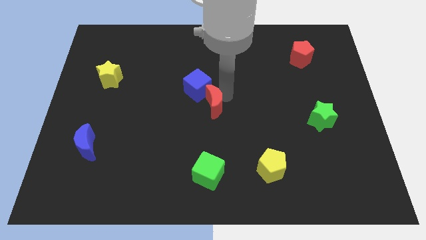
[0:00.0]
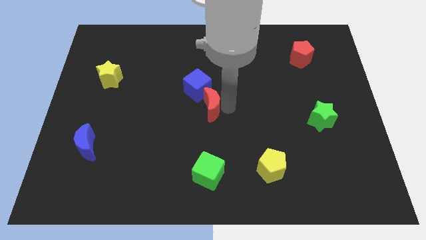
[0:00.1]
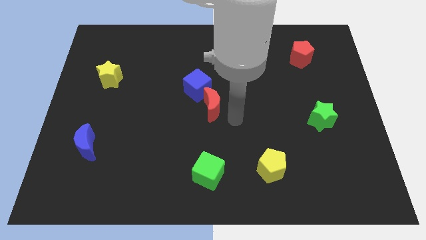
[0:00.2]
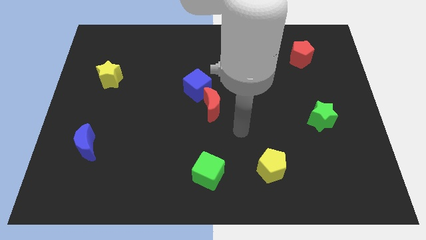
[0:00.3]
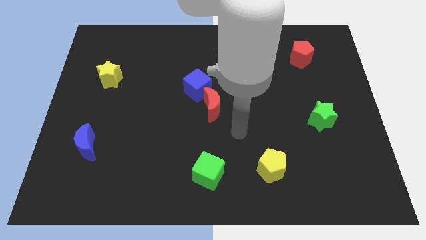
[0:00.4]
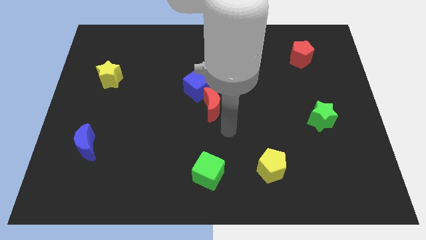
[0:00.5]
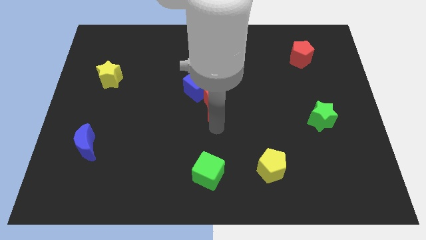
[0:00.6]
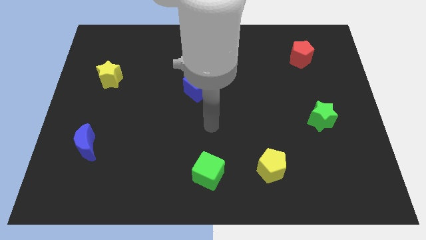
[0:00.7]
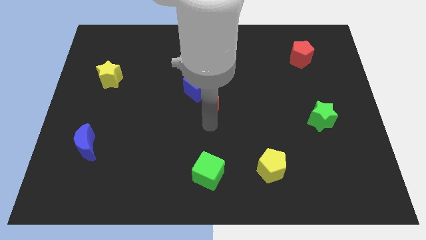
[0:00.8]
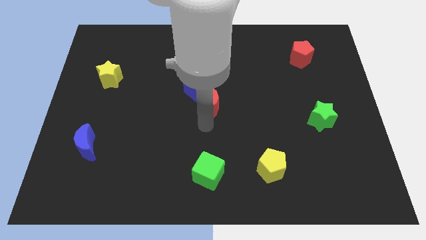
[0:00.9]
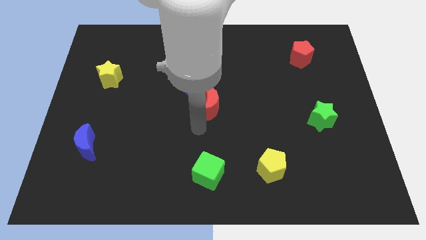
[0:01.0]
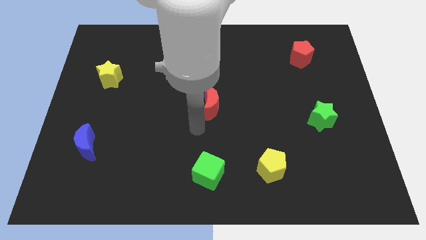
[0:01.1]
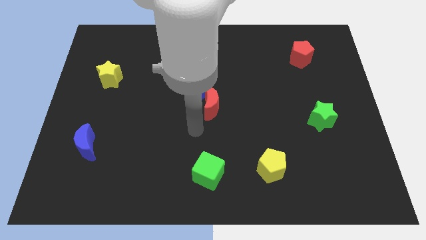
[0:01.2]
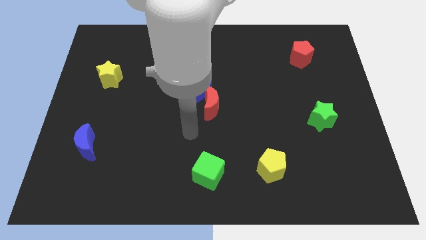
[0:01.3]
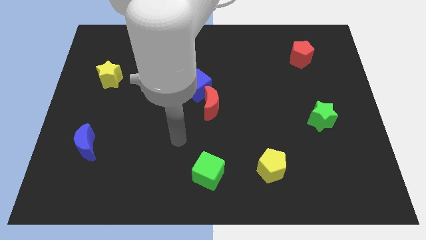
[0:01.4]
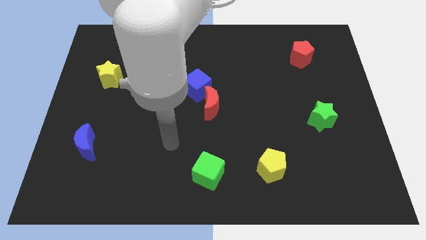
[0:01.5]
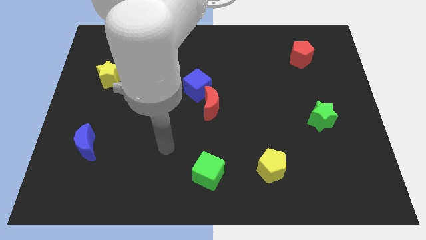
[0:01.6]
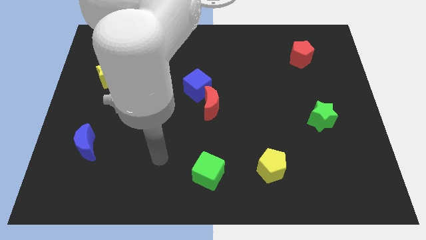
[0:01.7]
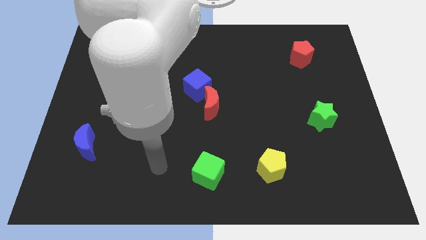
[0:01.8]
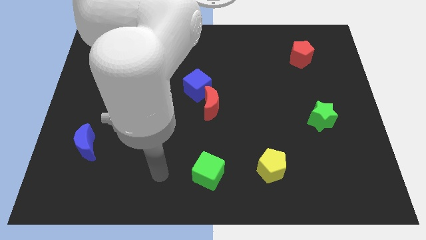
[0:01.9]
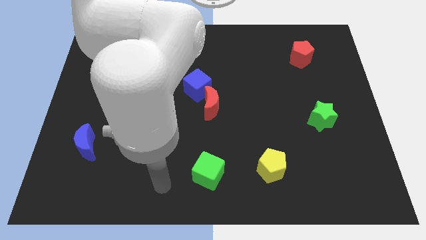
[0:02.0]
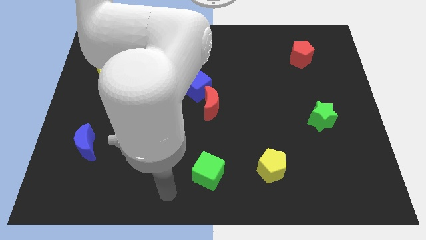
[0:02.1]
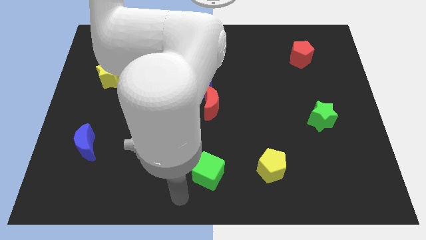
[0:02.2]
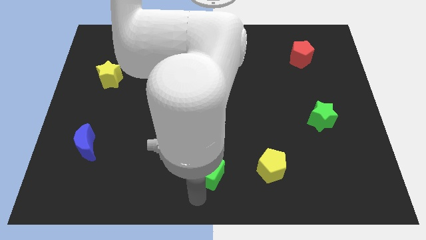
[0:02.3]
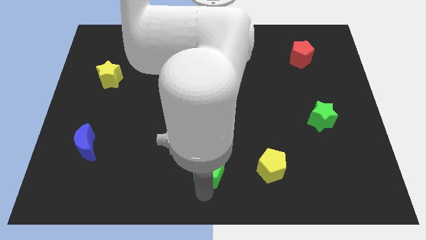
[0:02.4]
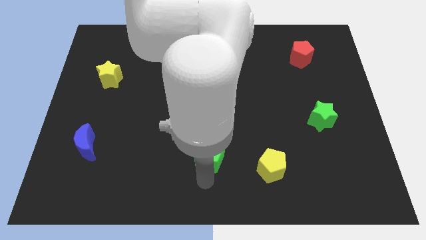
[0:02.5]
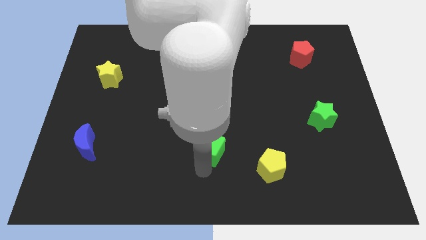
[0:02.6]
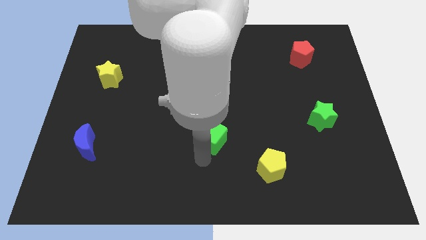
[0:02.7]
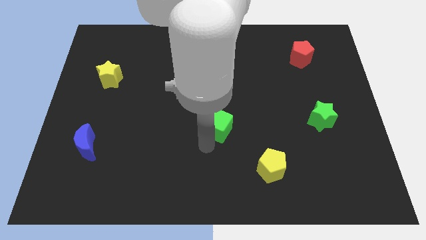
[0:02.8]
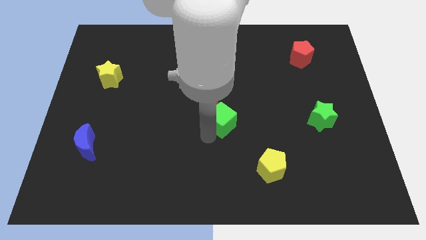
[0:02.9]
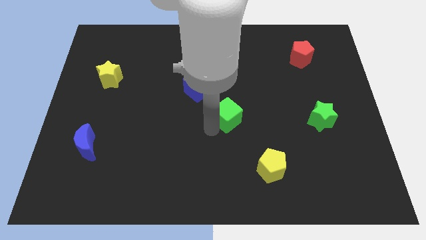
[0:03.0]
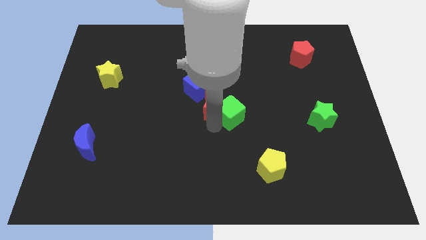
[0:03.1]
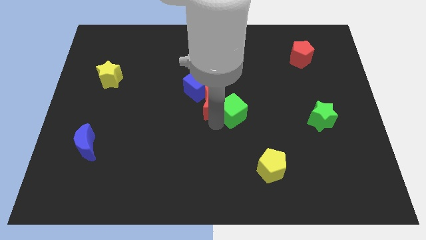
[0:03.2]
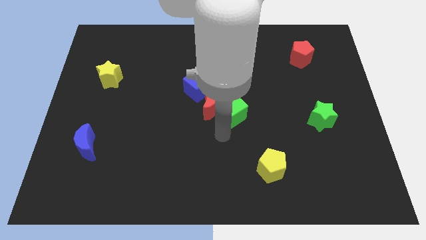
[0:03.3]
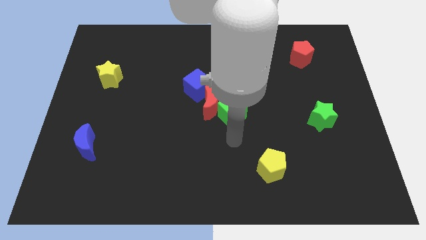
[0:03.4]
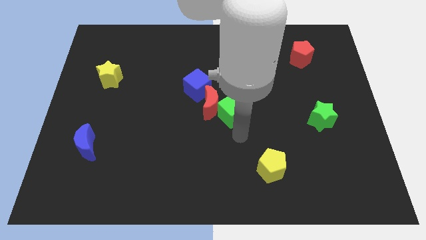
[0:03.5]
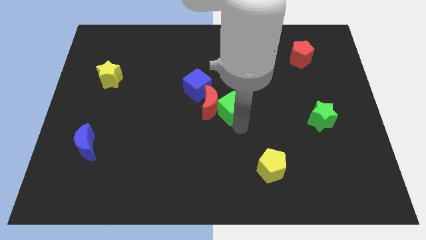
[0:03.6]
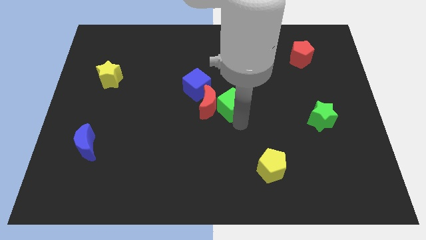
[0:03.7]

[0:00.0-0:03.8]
place the green cube at the right of the red crescent

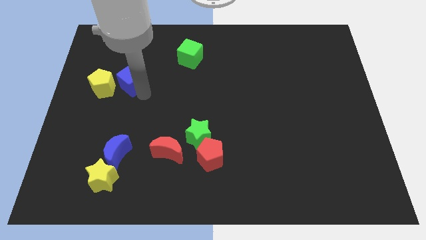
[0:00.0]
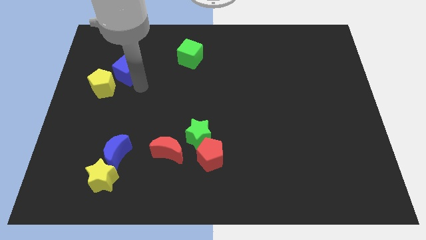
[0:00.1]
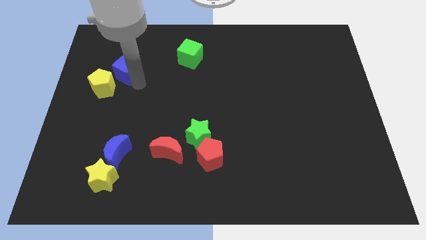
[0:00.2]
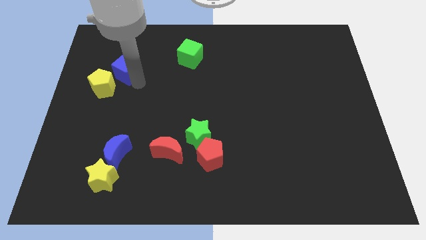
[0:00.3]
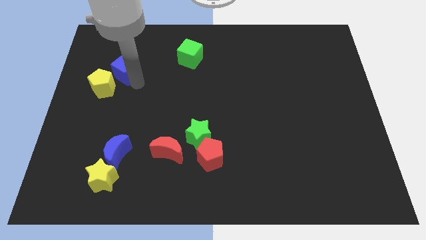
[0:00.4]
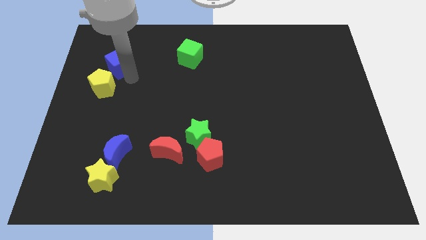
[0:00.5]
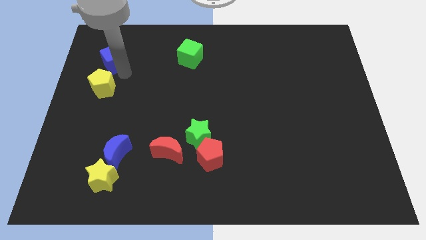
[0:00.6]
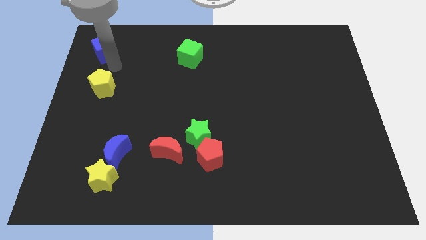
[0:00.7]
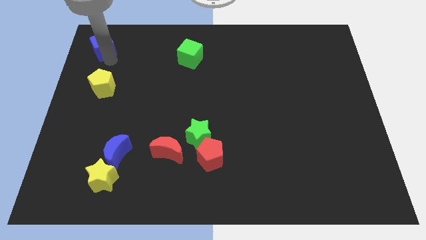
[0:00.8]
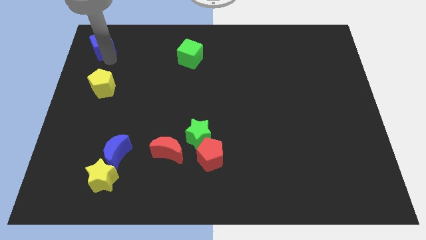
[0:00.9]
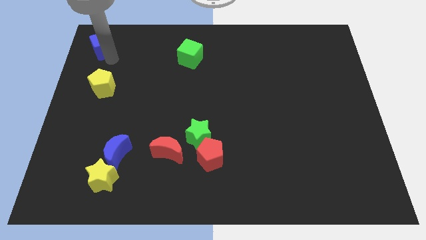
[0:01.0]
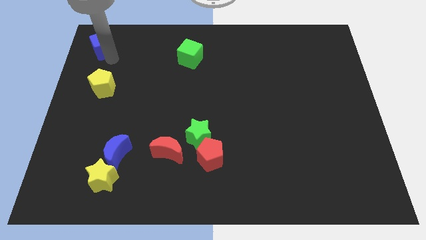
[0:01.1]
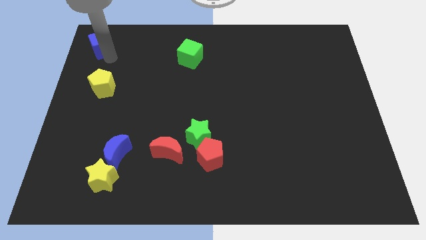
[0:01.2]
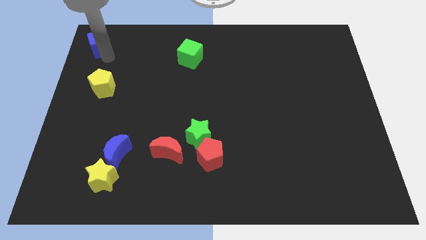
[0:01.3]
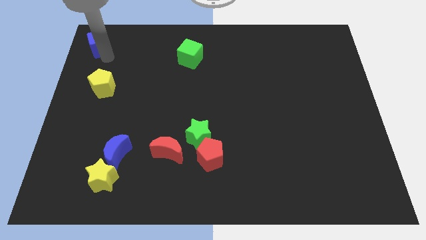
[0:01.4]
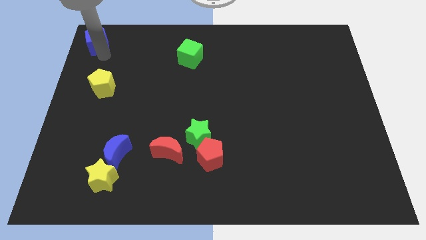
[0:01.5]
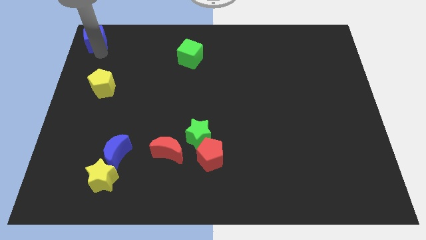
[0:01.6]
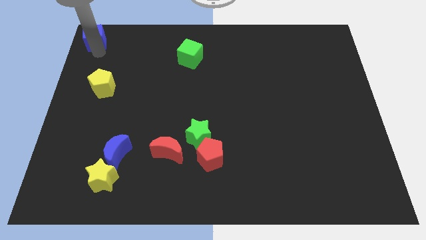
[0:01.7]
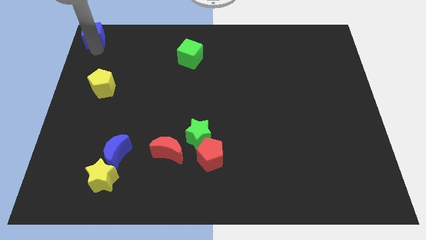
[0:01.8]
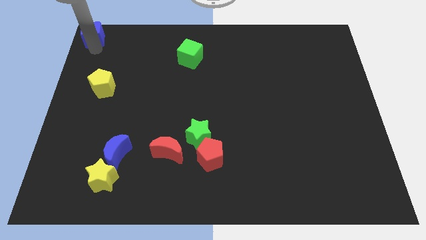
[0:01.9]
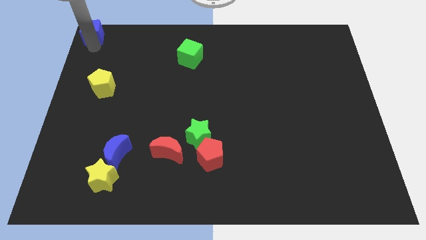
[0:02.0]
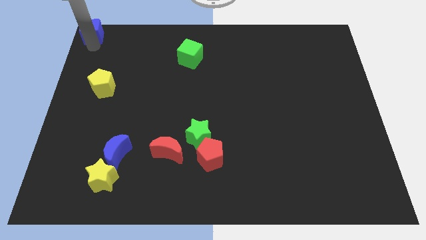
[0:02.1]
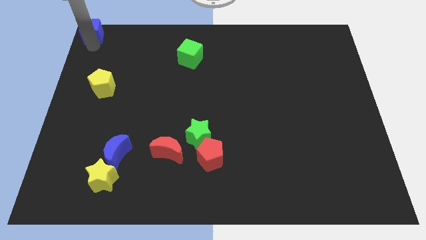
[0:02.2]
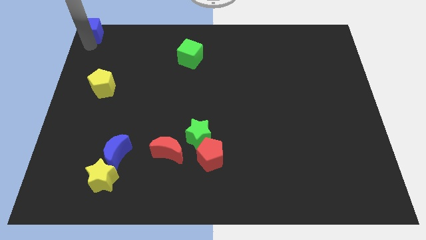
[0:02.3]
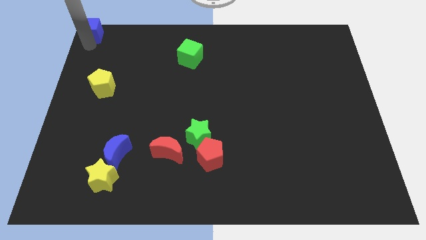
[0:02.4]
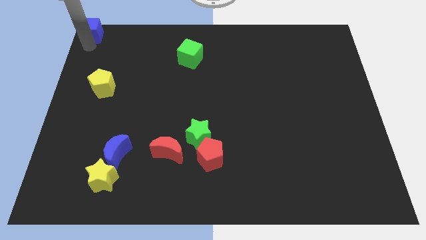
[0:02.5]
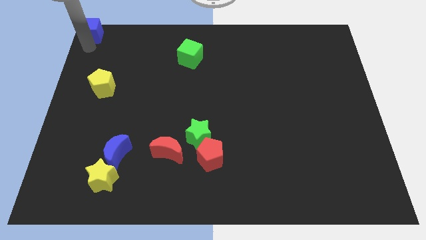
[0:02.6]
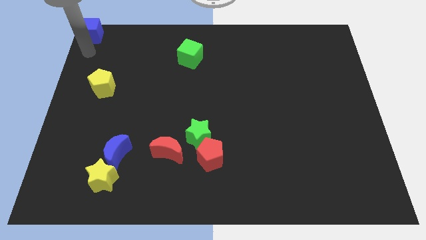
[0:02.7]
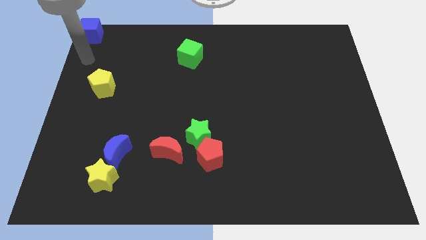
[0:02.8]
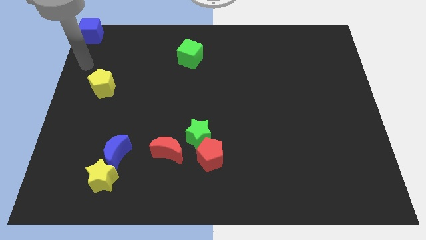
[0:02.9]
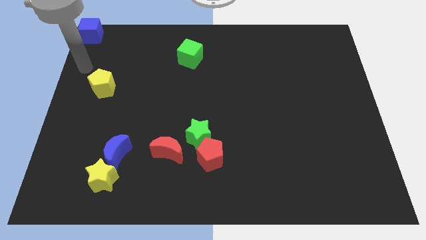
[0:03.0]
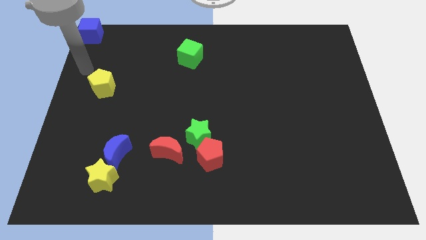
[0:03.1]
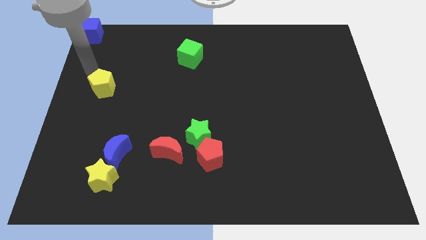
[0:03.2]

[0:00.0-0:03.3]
move the blue cube to the top left

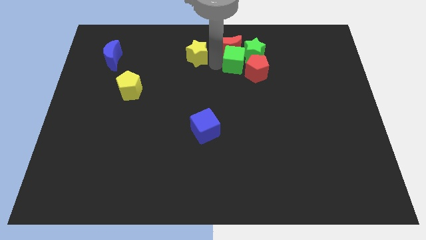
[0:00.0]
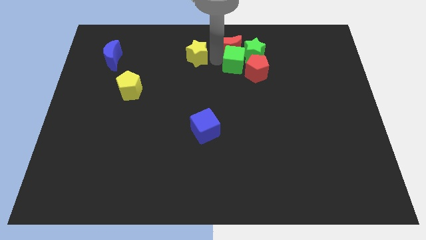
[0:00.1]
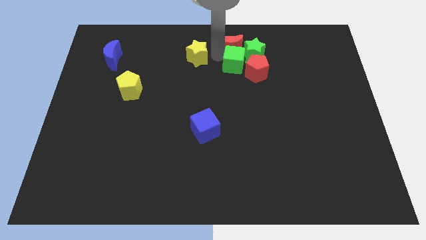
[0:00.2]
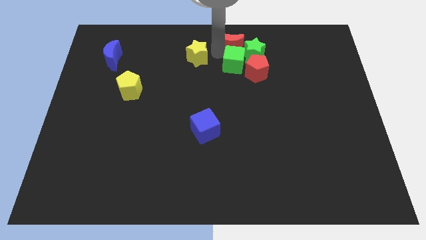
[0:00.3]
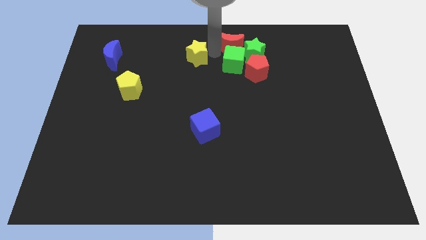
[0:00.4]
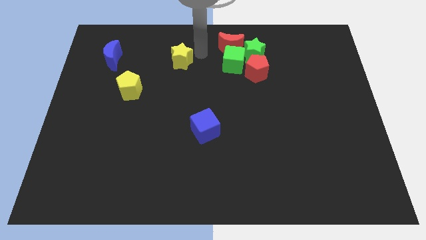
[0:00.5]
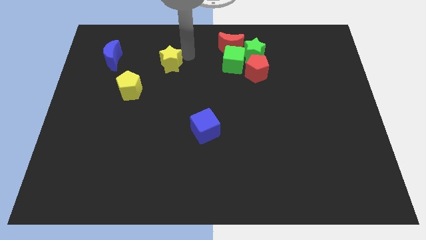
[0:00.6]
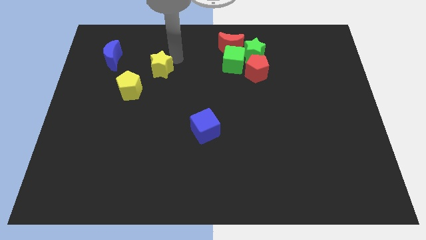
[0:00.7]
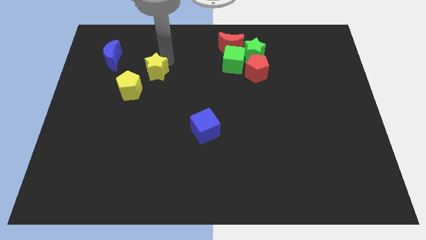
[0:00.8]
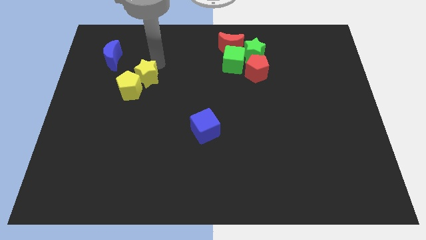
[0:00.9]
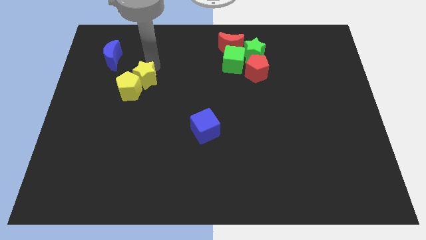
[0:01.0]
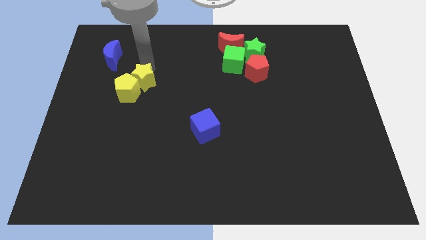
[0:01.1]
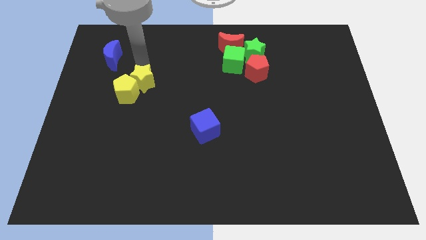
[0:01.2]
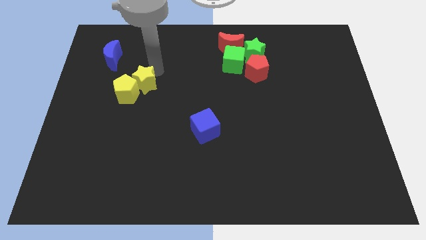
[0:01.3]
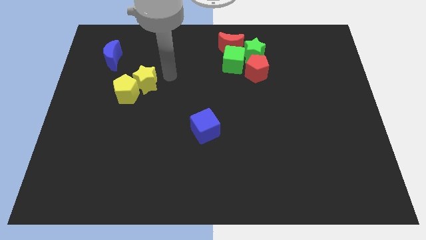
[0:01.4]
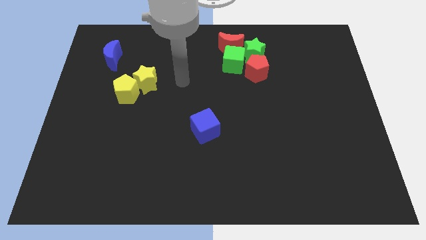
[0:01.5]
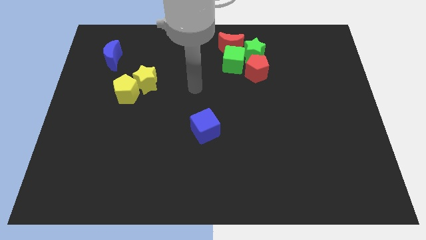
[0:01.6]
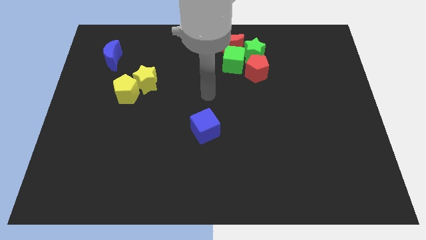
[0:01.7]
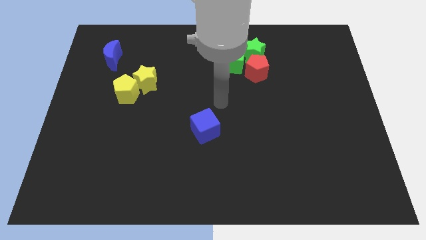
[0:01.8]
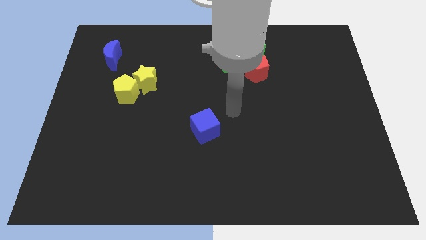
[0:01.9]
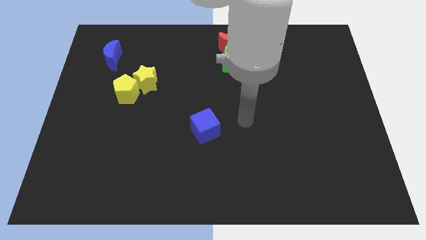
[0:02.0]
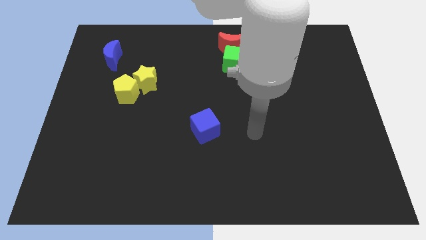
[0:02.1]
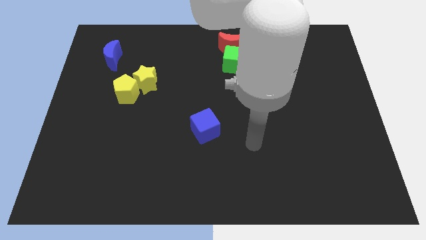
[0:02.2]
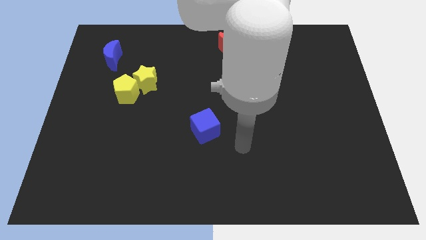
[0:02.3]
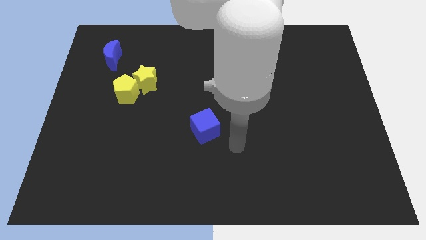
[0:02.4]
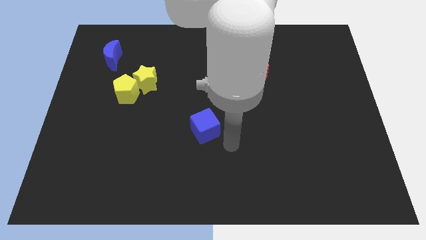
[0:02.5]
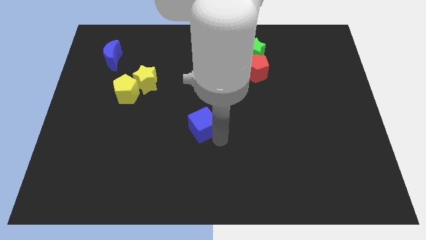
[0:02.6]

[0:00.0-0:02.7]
push the yellow star into the yellow pentagon
